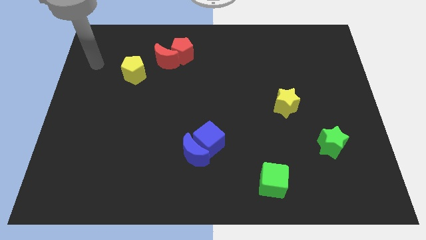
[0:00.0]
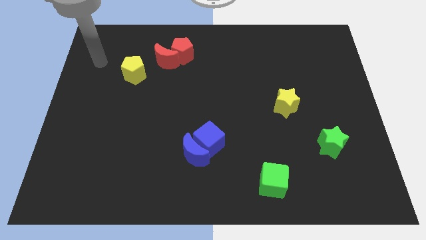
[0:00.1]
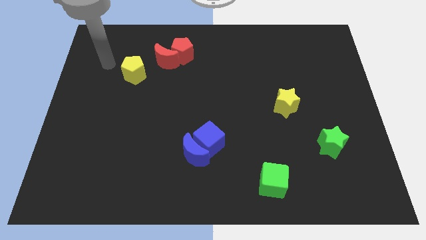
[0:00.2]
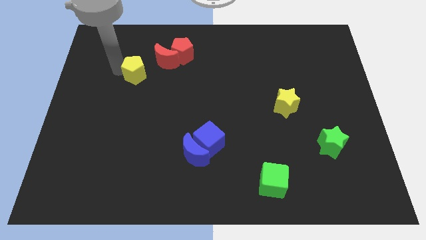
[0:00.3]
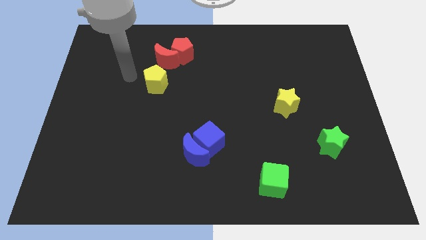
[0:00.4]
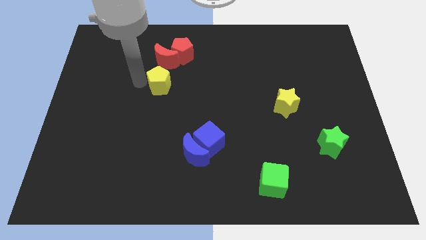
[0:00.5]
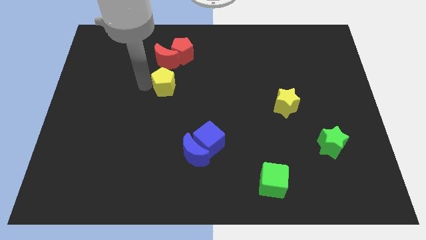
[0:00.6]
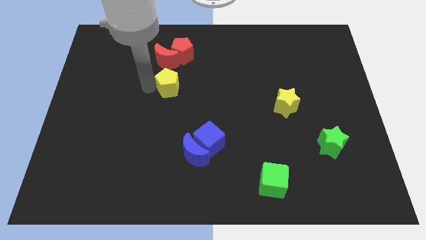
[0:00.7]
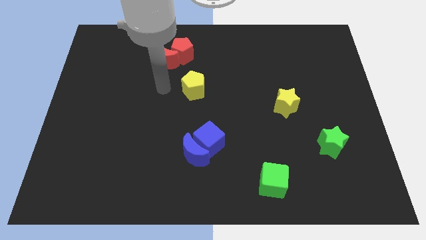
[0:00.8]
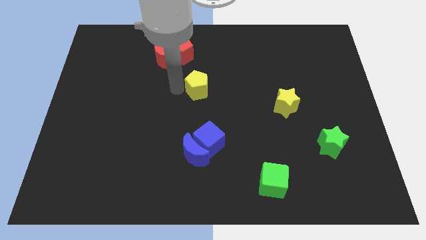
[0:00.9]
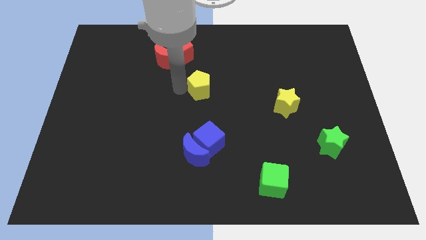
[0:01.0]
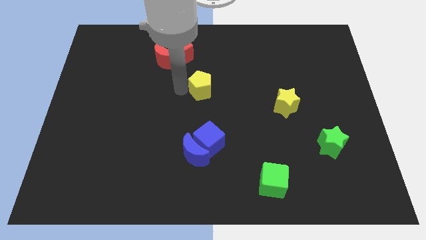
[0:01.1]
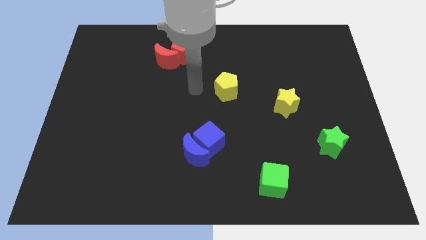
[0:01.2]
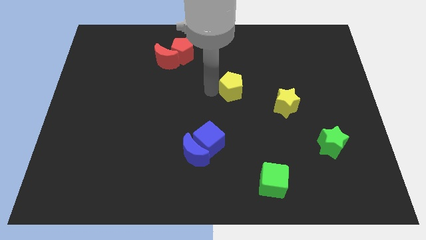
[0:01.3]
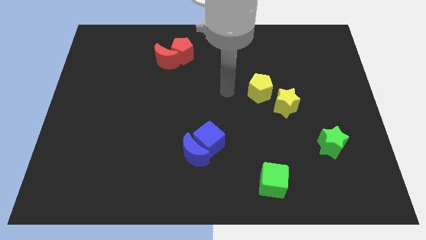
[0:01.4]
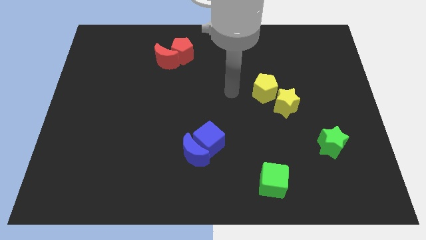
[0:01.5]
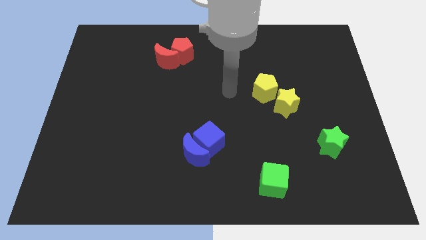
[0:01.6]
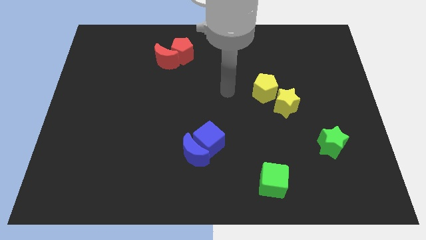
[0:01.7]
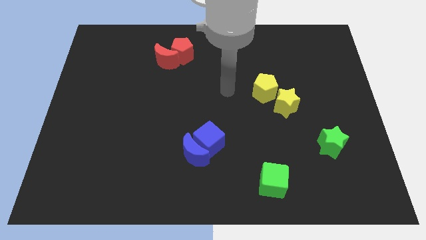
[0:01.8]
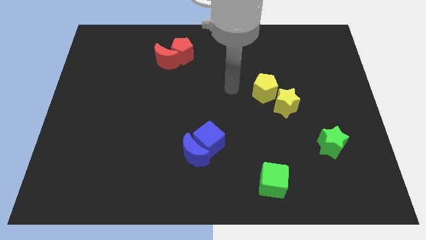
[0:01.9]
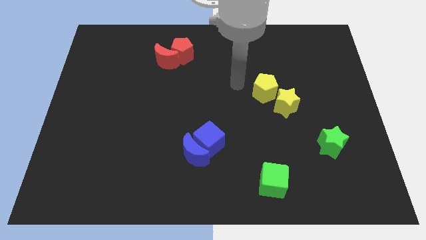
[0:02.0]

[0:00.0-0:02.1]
push yellow pentagon into yellow star

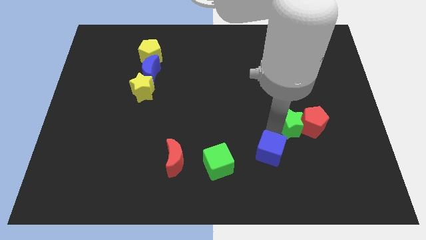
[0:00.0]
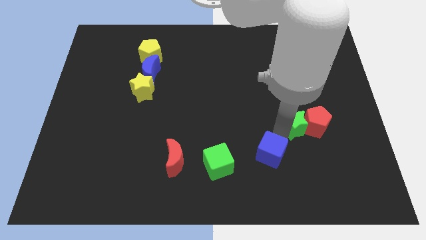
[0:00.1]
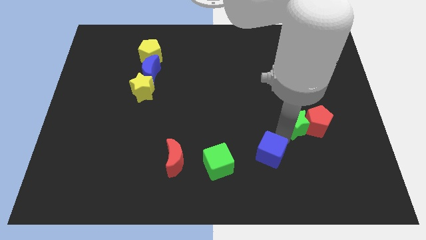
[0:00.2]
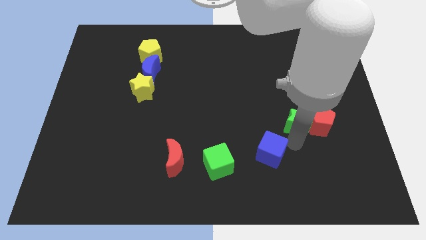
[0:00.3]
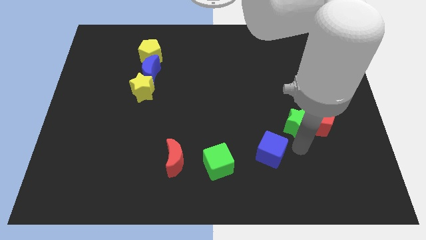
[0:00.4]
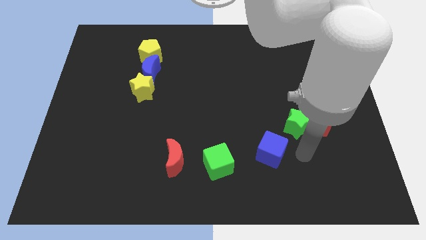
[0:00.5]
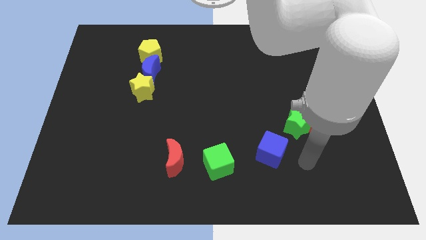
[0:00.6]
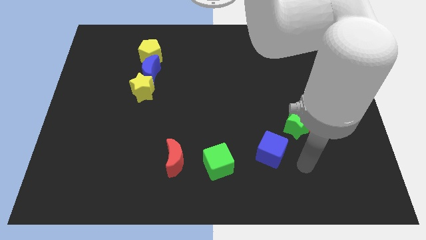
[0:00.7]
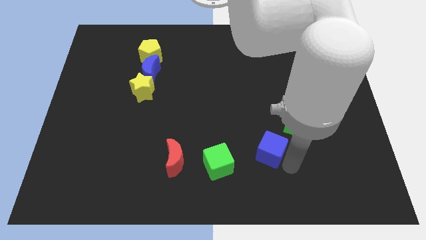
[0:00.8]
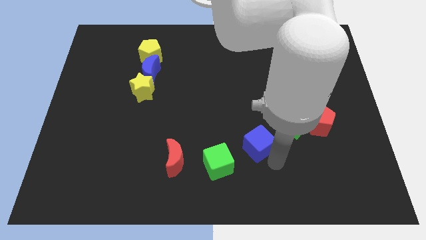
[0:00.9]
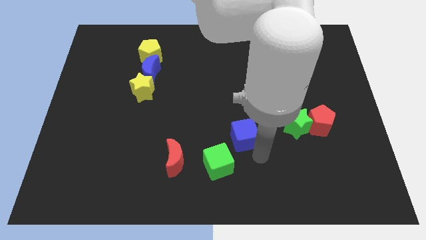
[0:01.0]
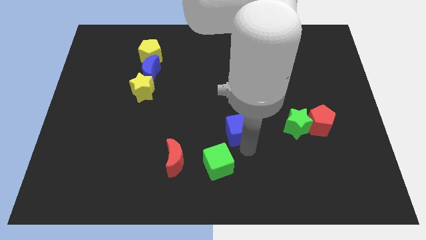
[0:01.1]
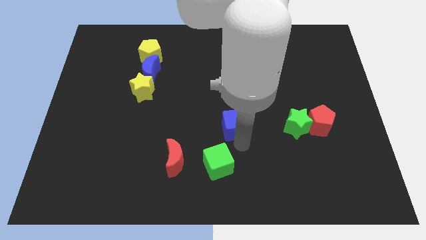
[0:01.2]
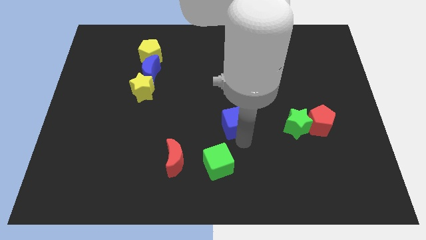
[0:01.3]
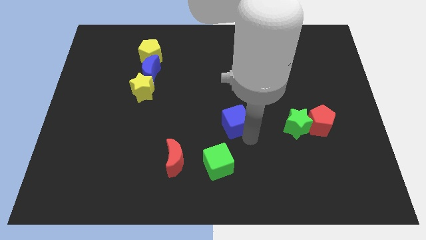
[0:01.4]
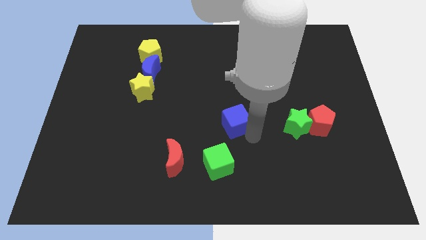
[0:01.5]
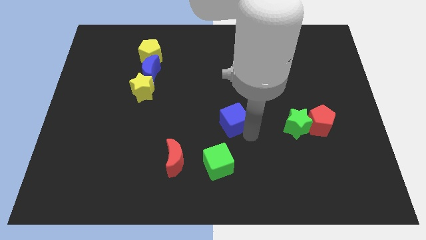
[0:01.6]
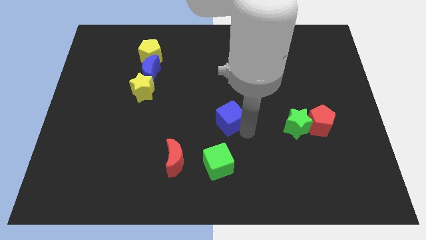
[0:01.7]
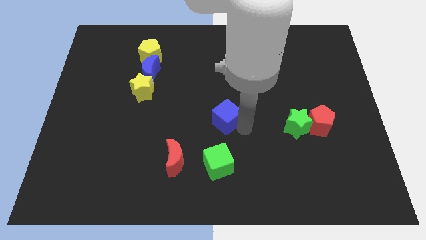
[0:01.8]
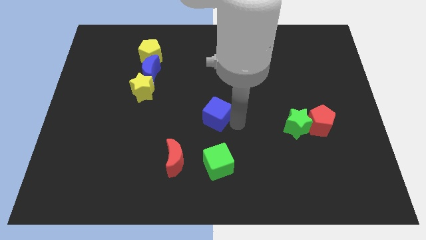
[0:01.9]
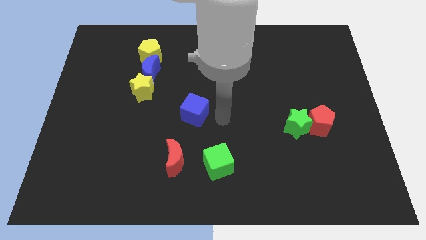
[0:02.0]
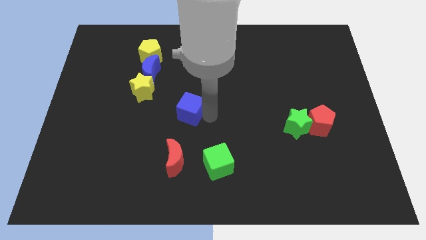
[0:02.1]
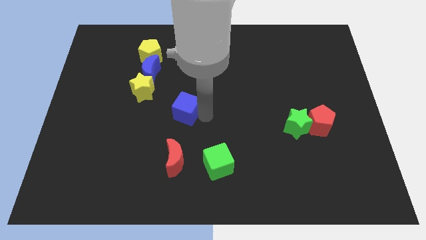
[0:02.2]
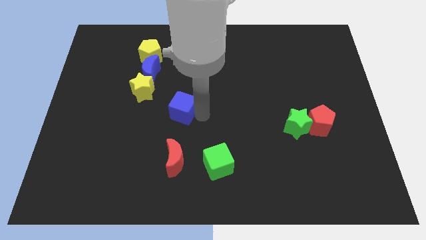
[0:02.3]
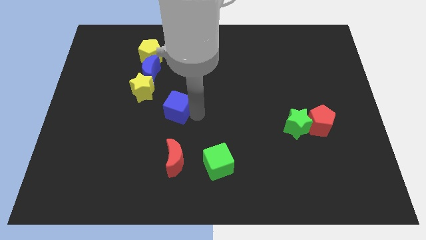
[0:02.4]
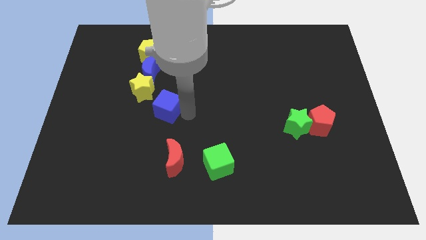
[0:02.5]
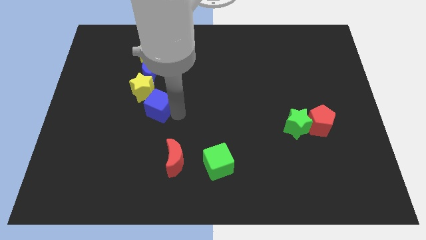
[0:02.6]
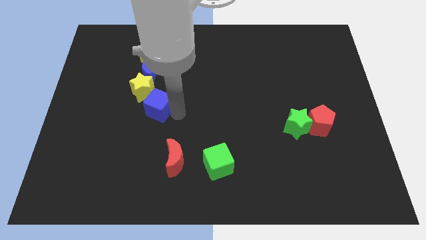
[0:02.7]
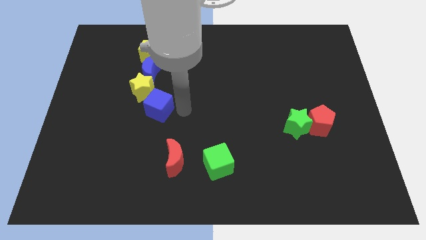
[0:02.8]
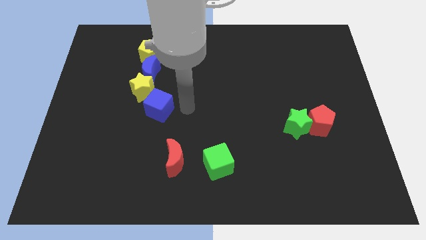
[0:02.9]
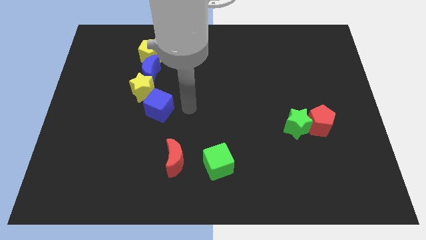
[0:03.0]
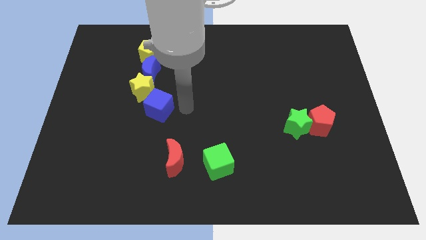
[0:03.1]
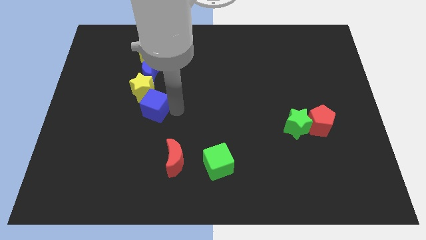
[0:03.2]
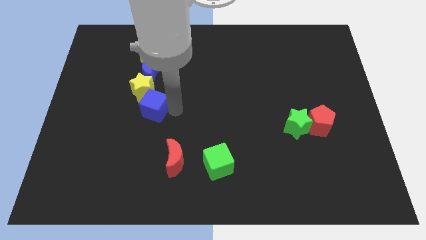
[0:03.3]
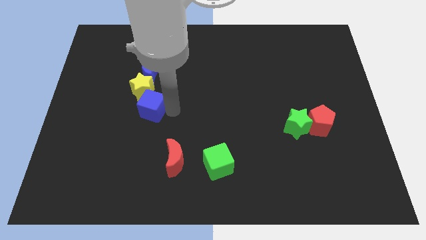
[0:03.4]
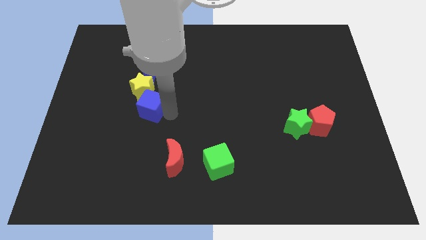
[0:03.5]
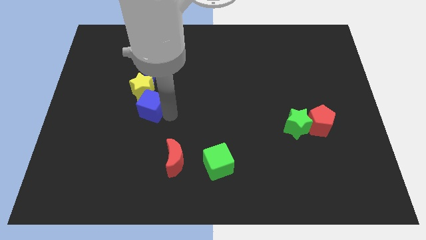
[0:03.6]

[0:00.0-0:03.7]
move the blue cube downwards to the yellow star

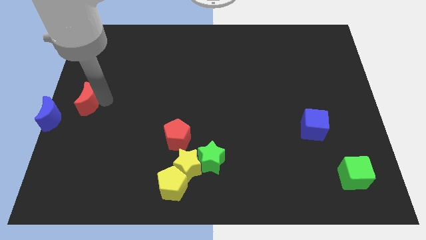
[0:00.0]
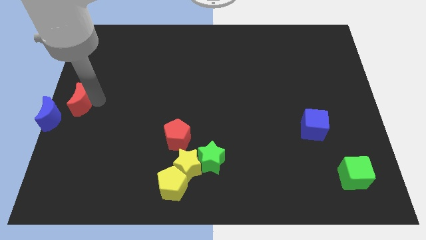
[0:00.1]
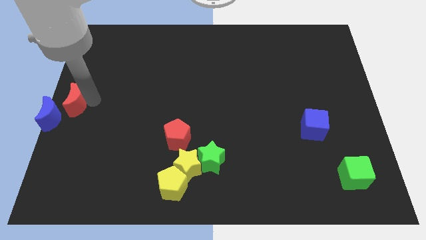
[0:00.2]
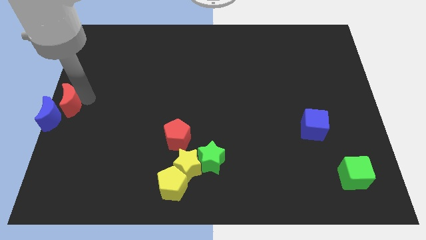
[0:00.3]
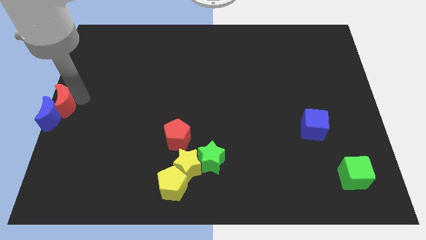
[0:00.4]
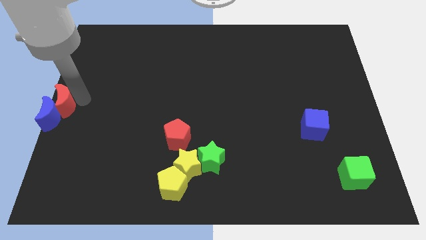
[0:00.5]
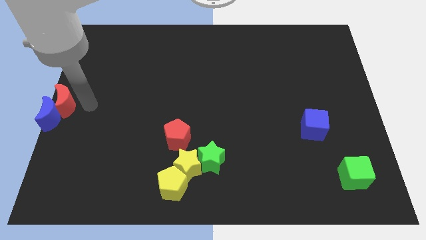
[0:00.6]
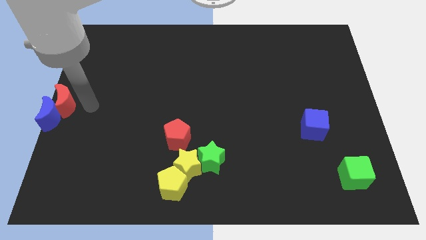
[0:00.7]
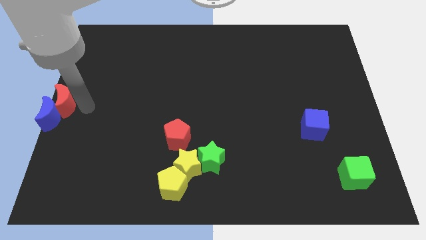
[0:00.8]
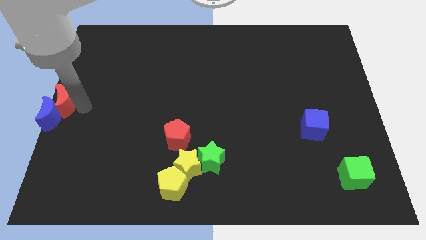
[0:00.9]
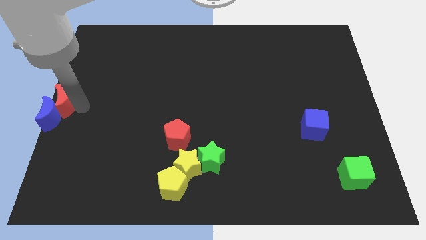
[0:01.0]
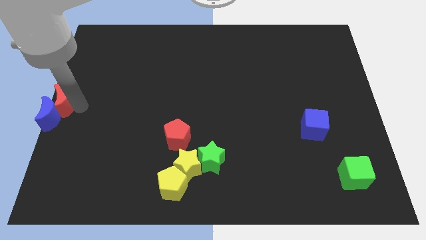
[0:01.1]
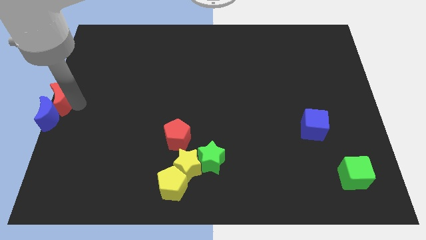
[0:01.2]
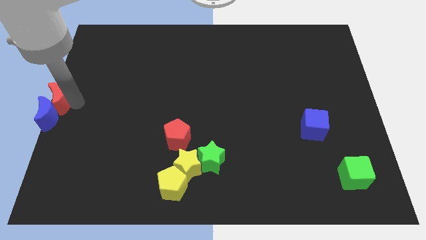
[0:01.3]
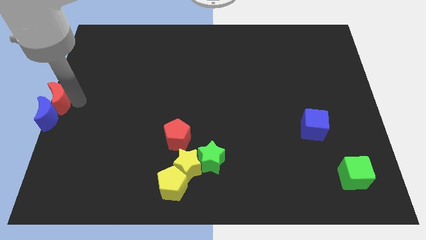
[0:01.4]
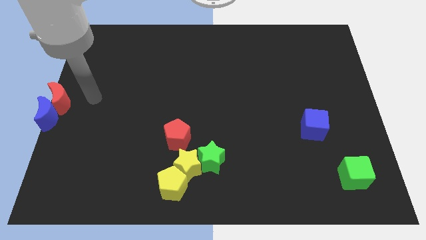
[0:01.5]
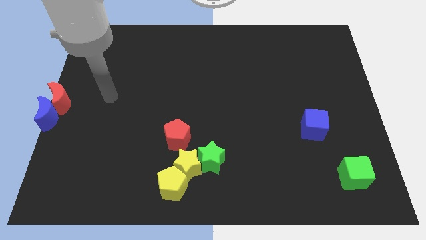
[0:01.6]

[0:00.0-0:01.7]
place the red crescent above the blue crescent

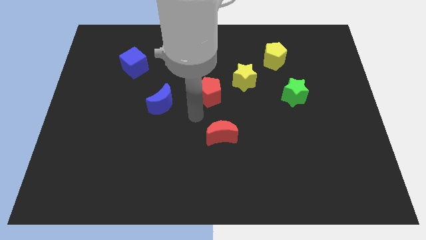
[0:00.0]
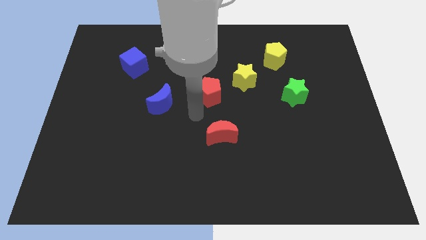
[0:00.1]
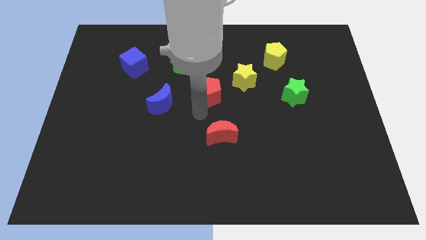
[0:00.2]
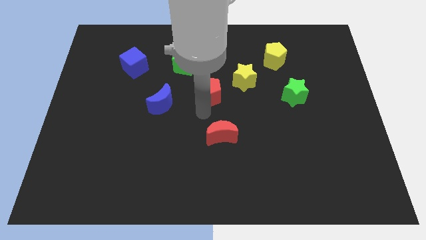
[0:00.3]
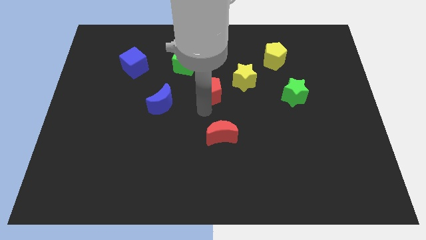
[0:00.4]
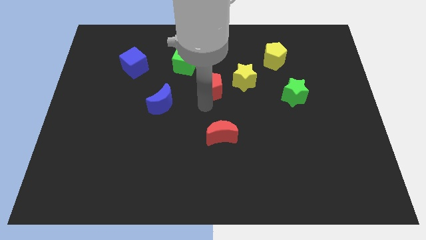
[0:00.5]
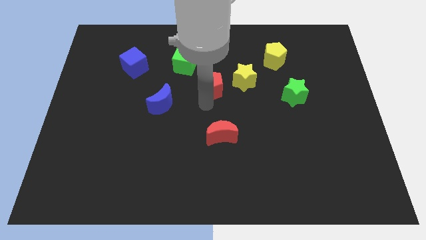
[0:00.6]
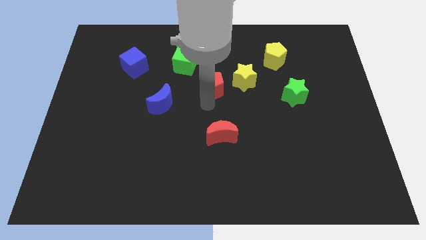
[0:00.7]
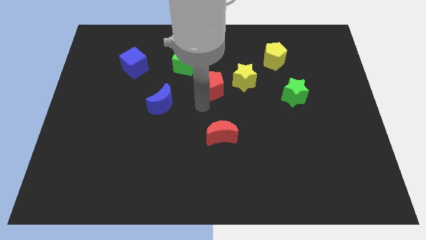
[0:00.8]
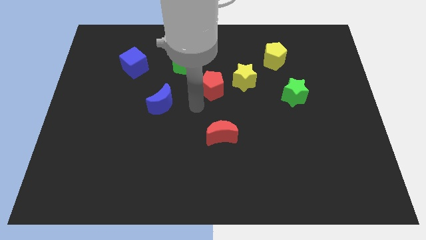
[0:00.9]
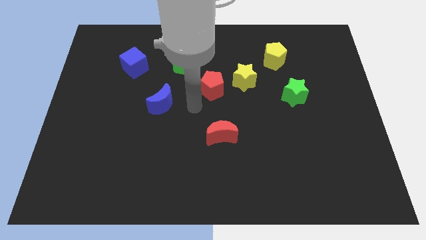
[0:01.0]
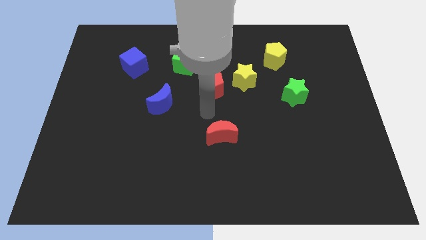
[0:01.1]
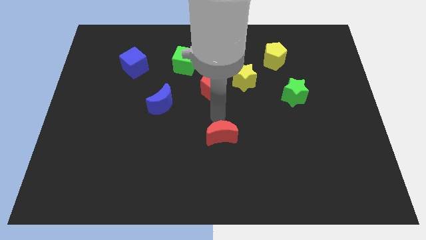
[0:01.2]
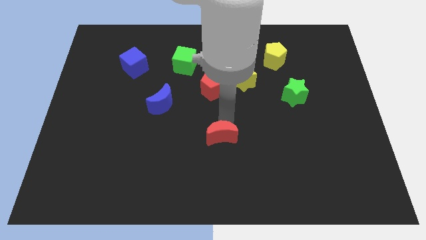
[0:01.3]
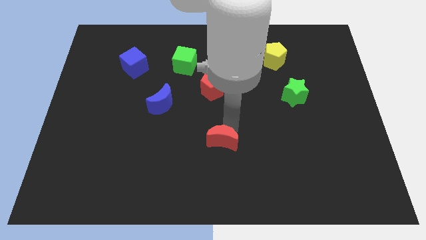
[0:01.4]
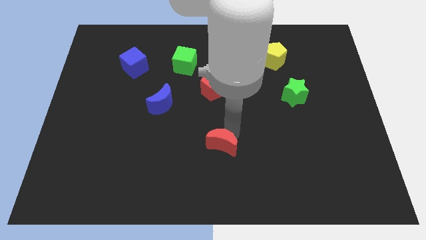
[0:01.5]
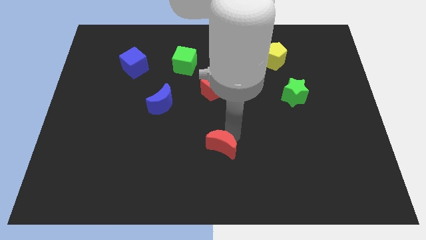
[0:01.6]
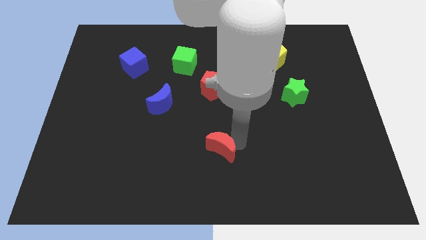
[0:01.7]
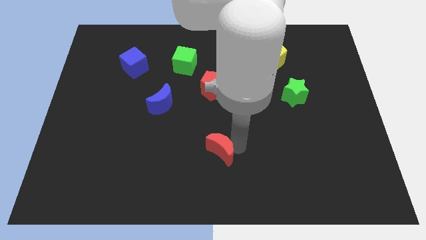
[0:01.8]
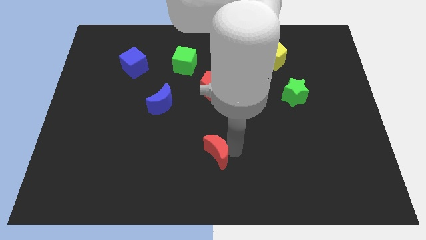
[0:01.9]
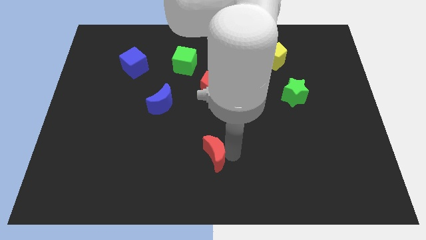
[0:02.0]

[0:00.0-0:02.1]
place the red crescent vertically below the red pentagon
